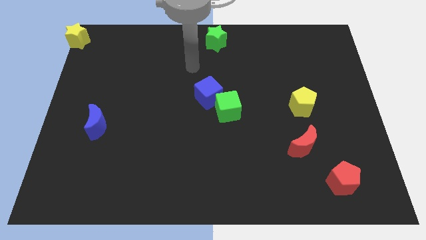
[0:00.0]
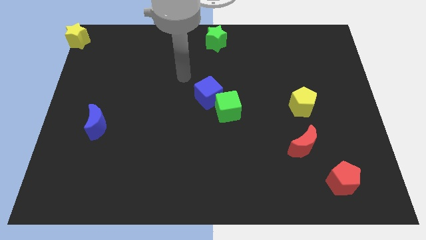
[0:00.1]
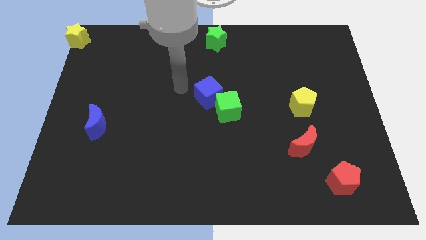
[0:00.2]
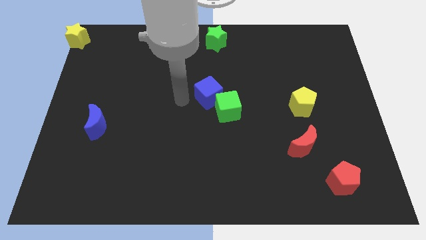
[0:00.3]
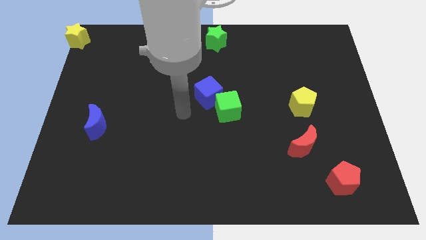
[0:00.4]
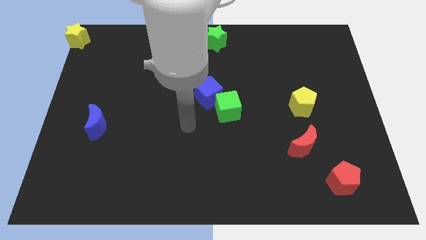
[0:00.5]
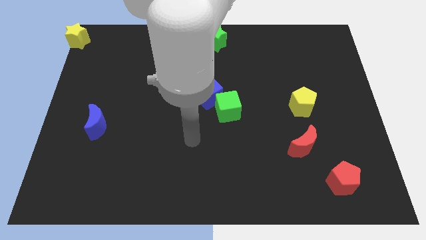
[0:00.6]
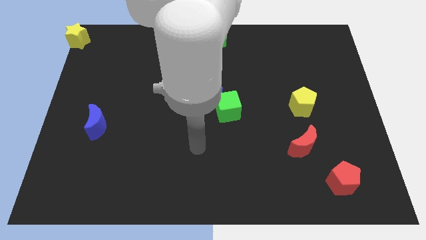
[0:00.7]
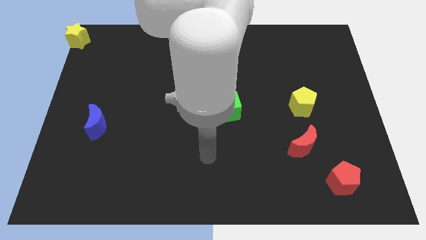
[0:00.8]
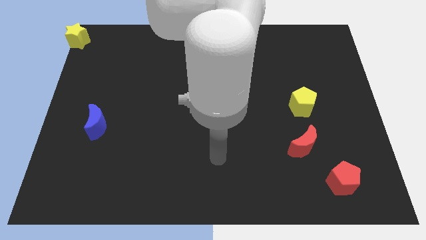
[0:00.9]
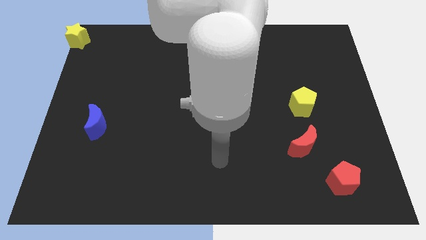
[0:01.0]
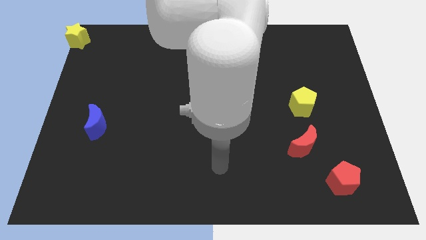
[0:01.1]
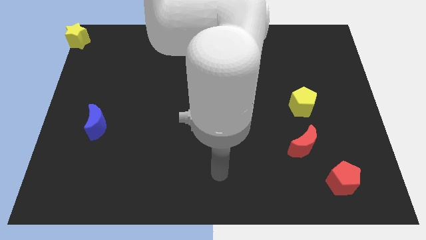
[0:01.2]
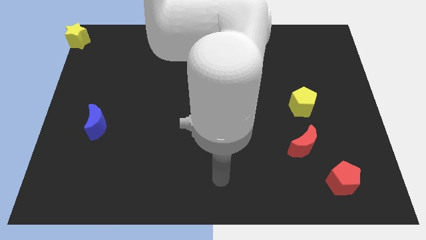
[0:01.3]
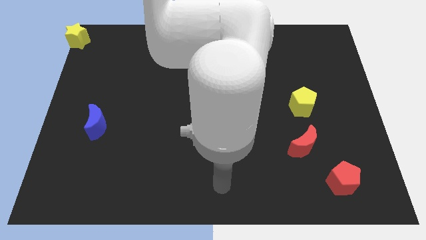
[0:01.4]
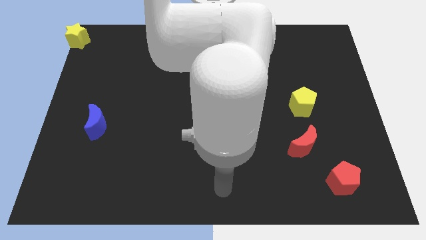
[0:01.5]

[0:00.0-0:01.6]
move your arm to the bottom center of the board

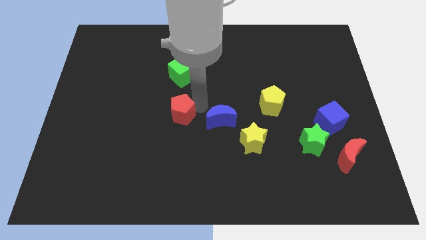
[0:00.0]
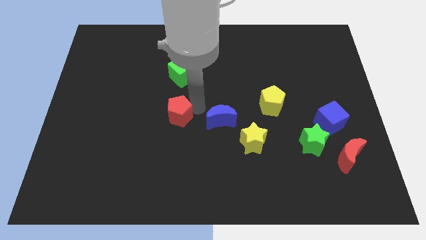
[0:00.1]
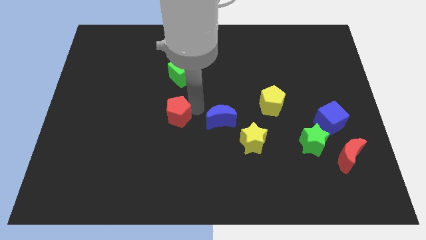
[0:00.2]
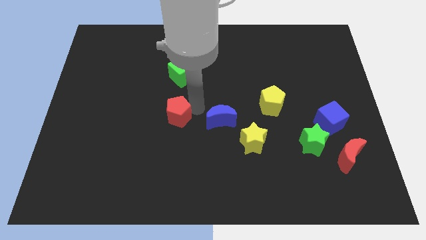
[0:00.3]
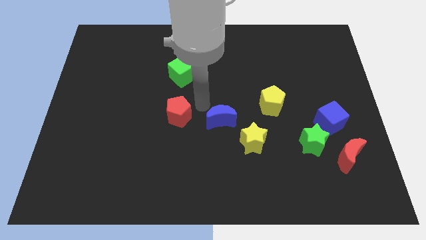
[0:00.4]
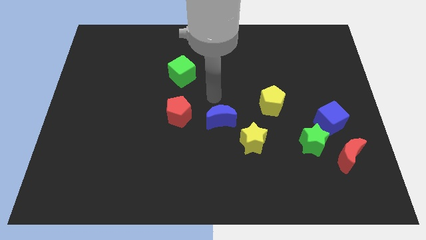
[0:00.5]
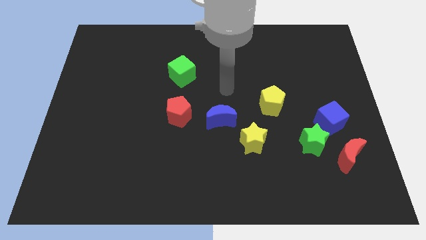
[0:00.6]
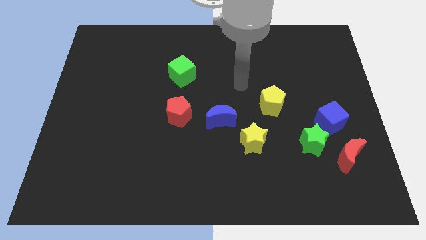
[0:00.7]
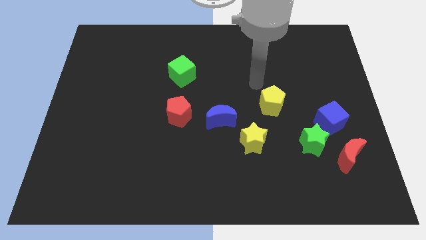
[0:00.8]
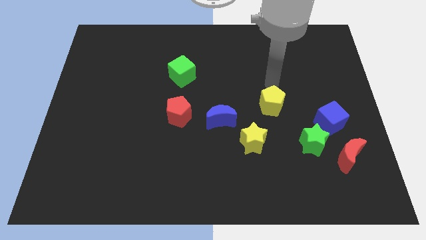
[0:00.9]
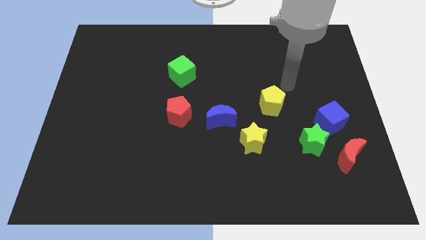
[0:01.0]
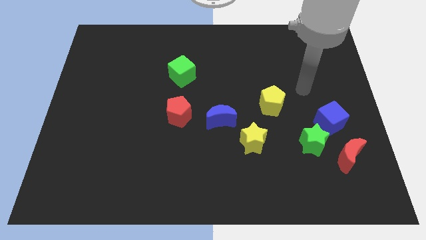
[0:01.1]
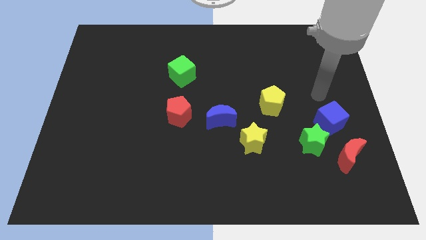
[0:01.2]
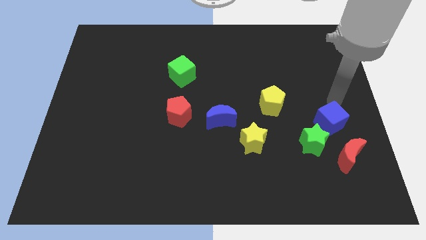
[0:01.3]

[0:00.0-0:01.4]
move your arm to the blue crescent

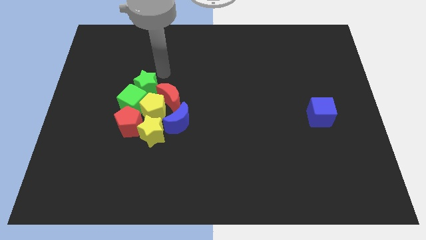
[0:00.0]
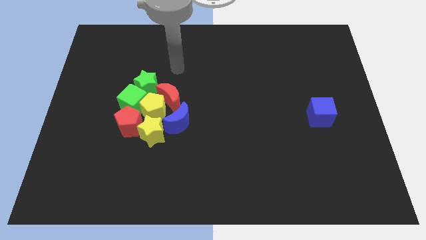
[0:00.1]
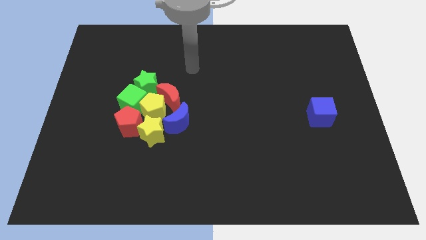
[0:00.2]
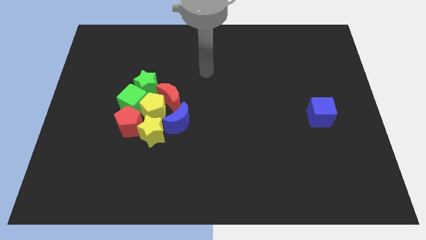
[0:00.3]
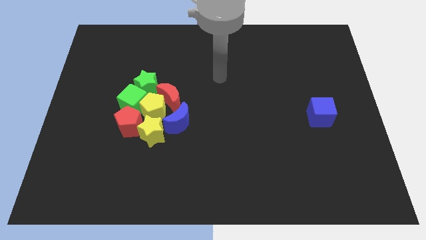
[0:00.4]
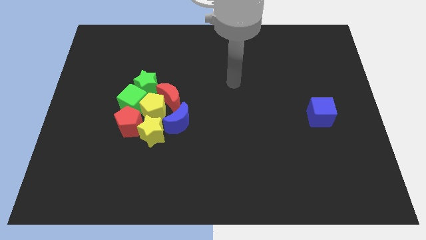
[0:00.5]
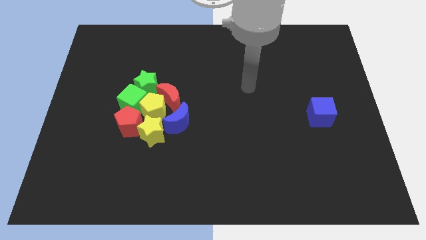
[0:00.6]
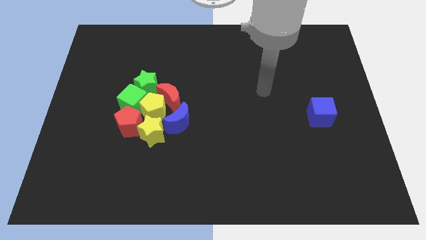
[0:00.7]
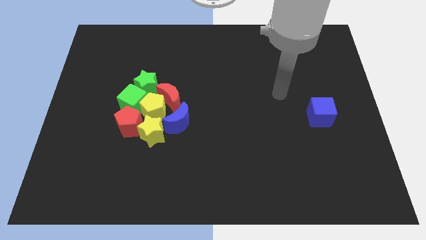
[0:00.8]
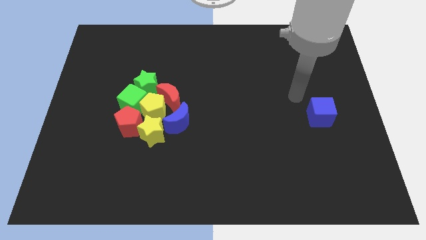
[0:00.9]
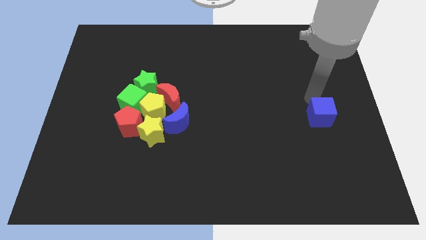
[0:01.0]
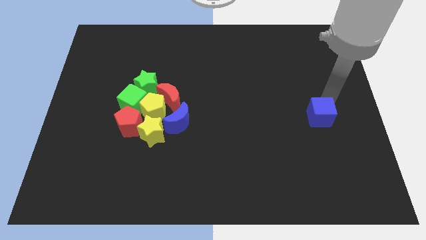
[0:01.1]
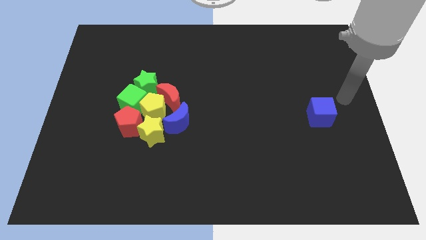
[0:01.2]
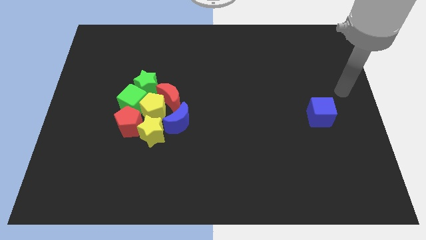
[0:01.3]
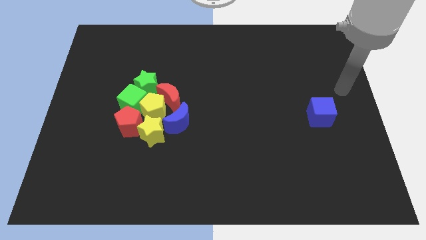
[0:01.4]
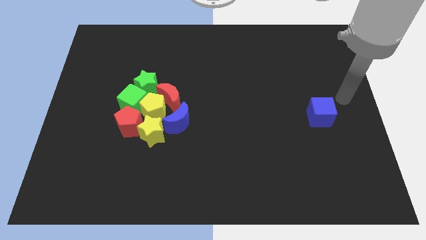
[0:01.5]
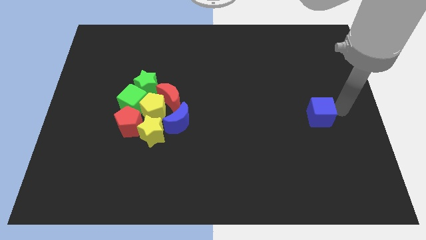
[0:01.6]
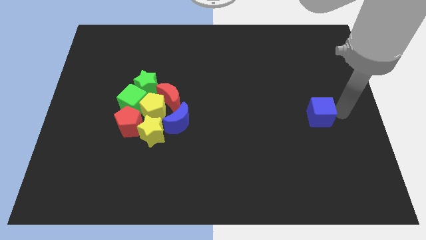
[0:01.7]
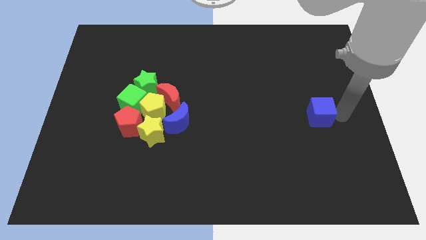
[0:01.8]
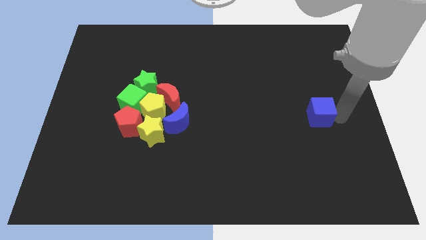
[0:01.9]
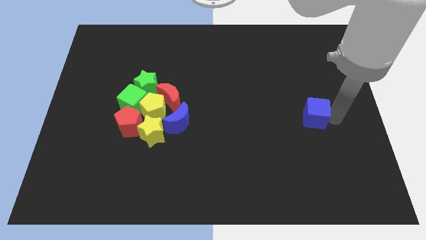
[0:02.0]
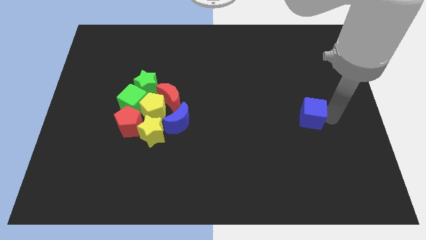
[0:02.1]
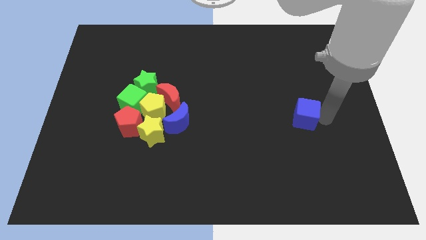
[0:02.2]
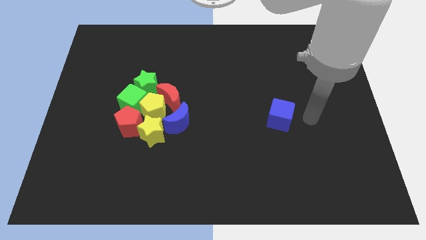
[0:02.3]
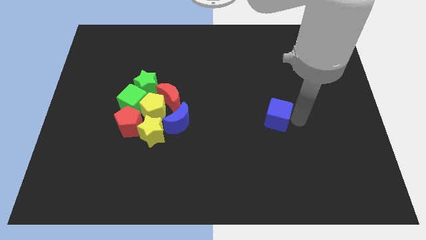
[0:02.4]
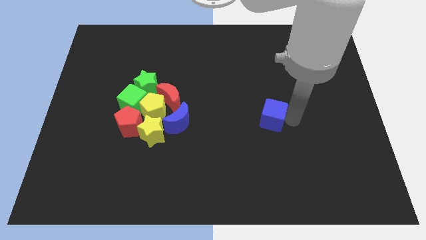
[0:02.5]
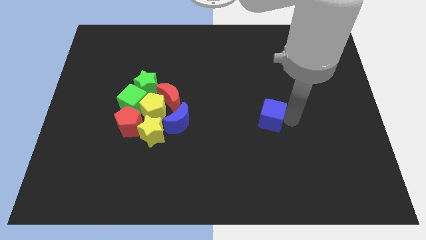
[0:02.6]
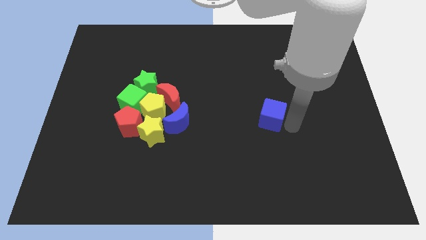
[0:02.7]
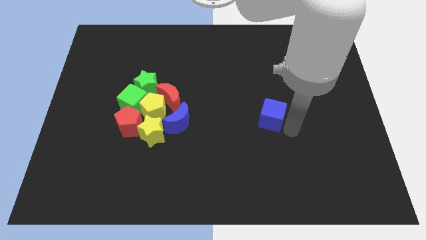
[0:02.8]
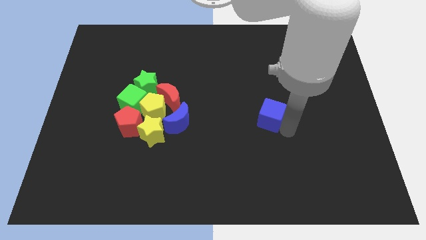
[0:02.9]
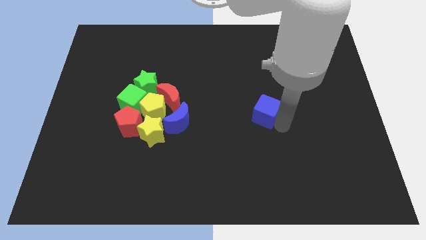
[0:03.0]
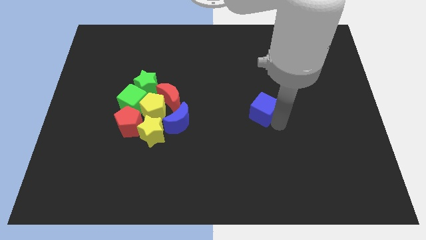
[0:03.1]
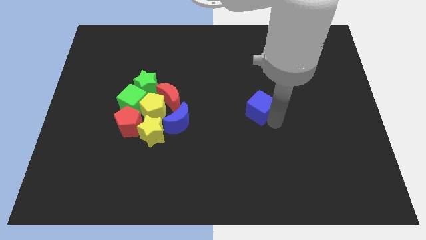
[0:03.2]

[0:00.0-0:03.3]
push the blue cube towards the center of the board

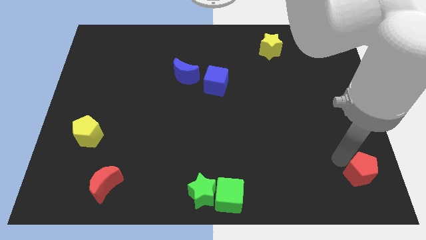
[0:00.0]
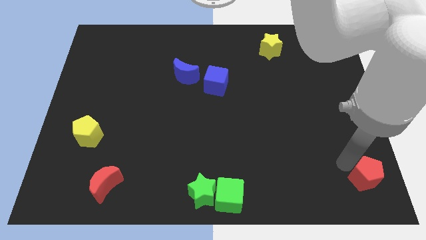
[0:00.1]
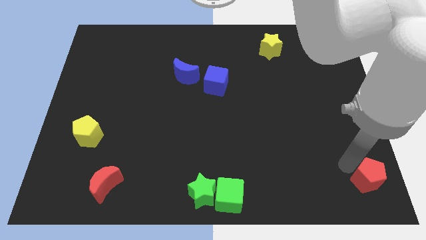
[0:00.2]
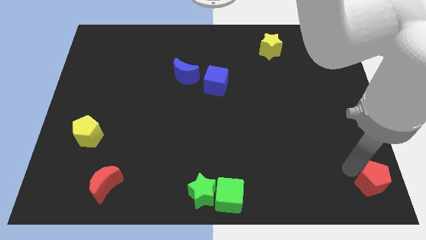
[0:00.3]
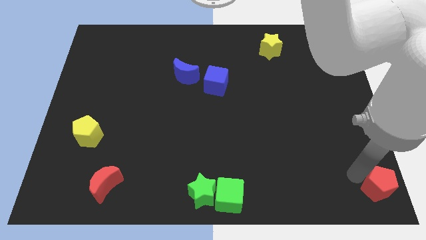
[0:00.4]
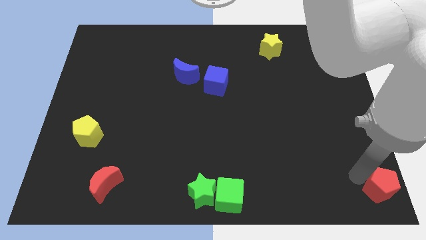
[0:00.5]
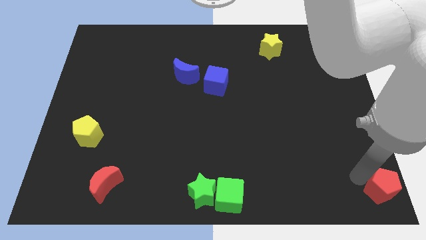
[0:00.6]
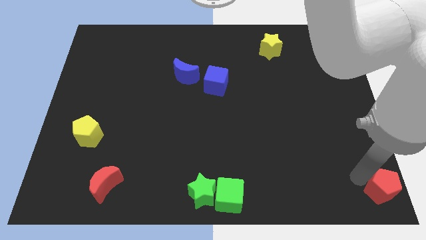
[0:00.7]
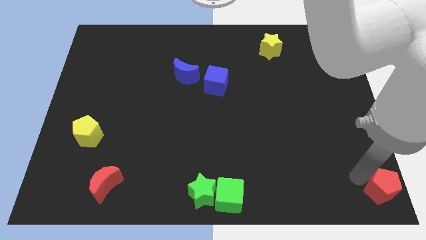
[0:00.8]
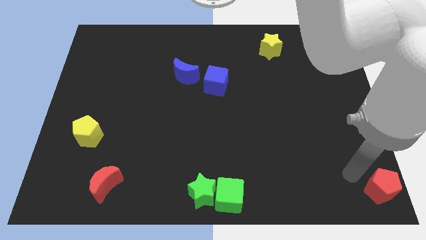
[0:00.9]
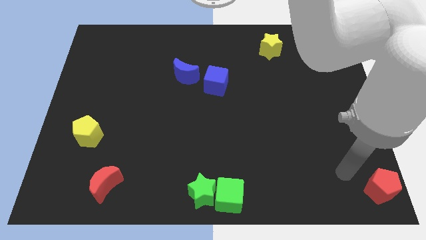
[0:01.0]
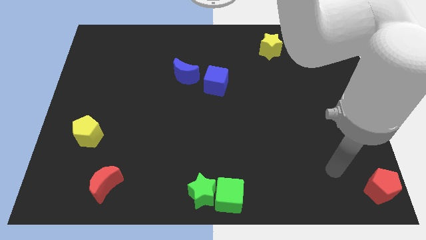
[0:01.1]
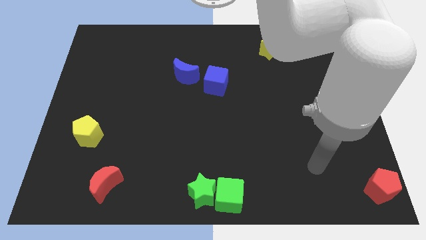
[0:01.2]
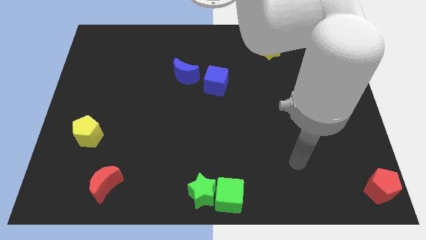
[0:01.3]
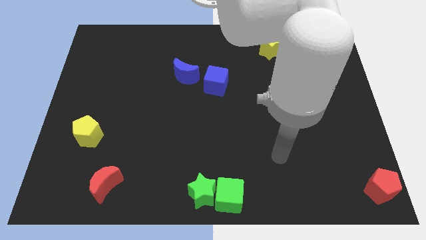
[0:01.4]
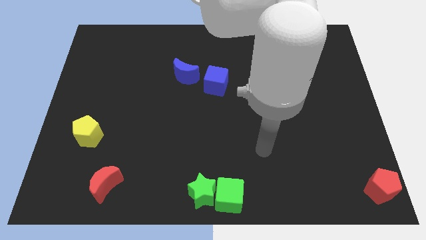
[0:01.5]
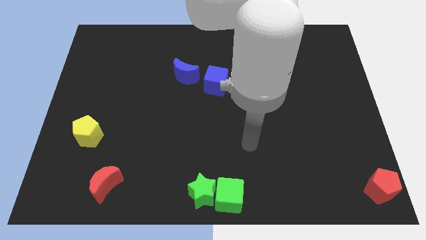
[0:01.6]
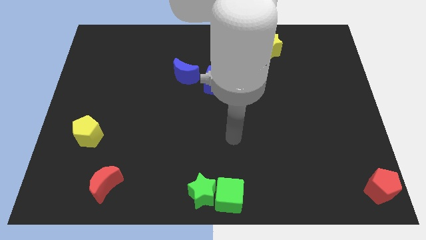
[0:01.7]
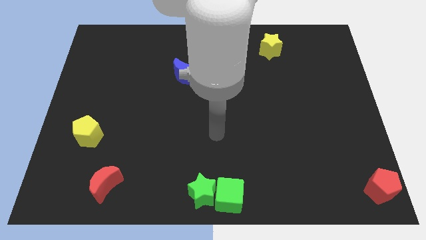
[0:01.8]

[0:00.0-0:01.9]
move the red pentagon to the bottom right corner of the board

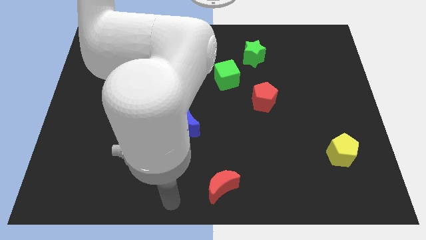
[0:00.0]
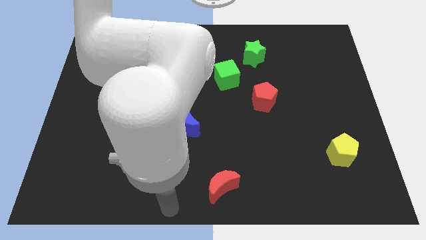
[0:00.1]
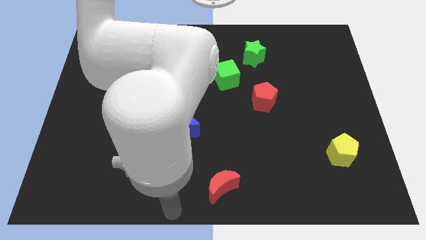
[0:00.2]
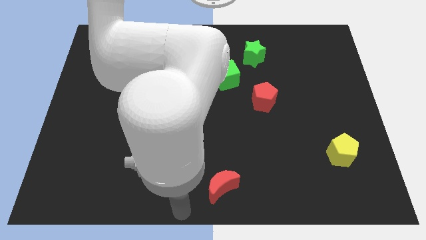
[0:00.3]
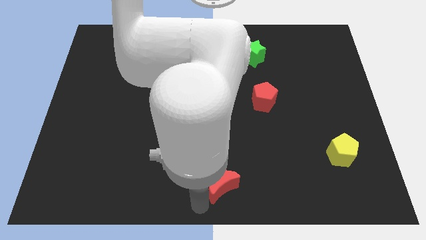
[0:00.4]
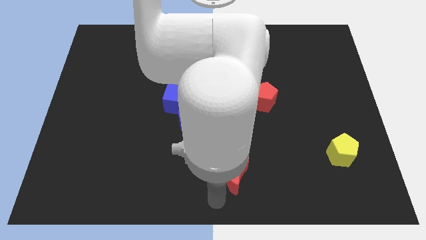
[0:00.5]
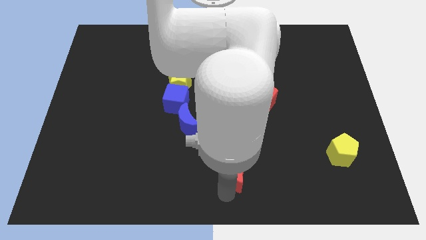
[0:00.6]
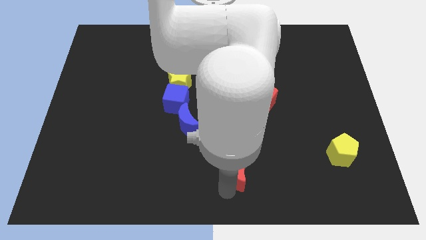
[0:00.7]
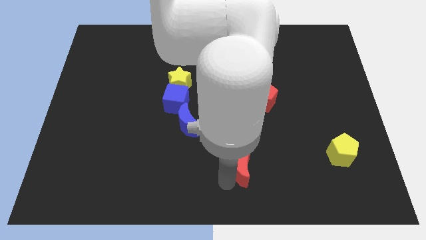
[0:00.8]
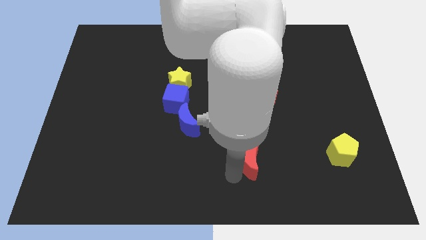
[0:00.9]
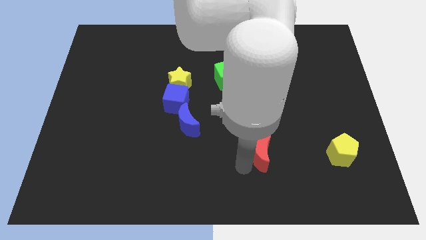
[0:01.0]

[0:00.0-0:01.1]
push the red crescent
